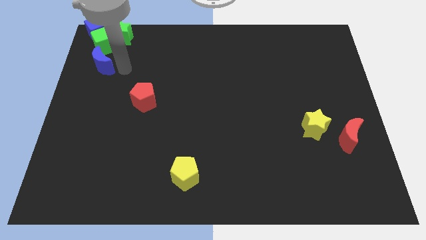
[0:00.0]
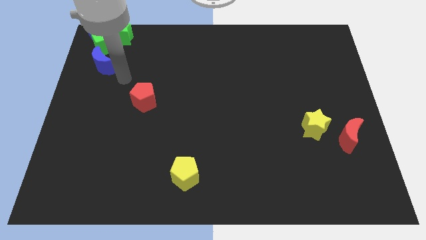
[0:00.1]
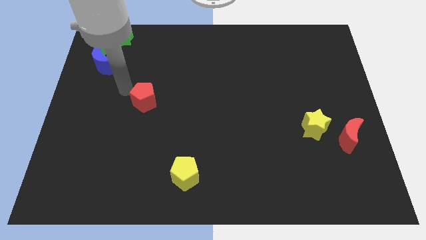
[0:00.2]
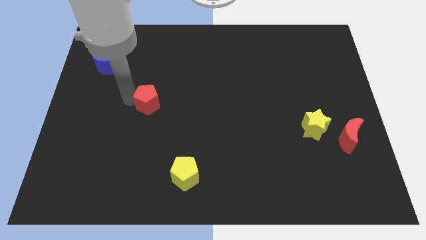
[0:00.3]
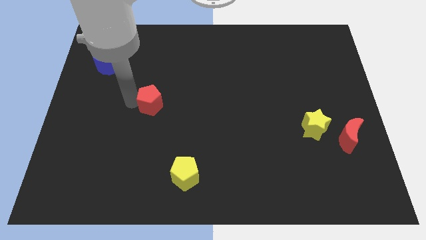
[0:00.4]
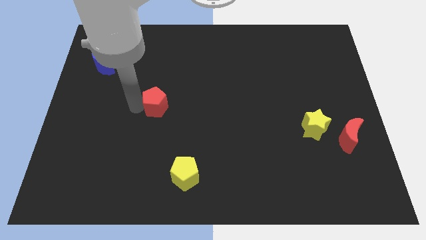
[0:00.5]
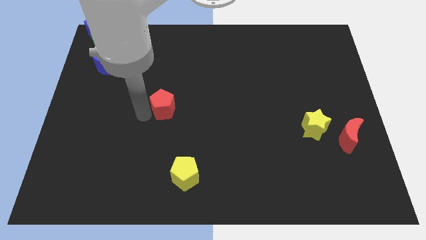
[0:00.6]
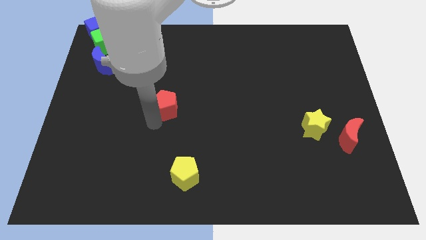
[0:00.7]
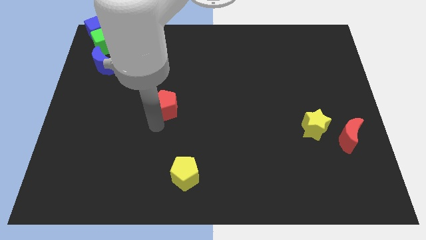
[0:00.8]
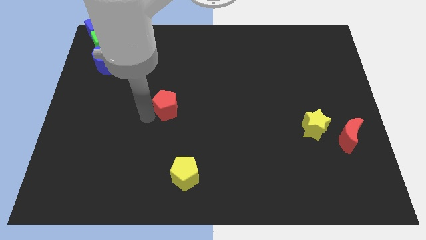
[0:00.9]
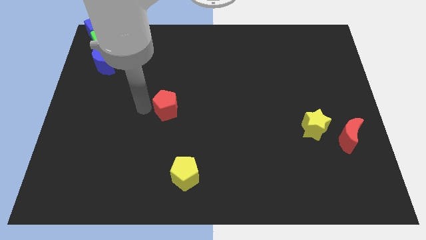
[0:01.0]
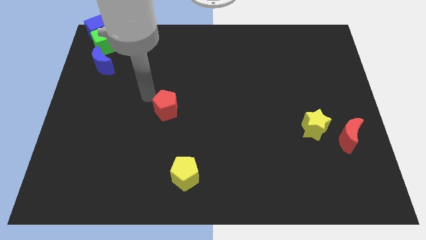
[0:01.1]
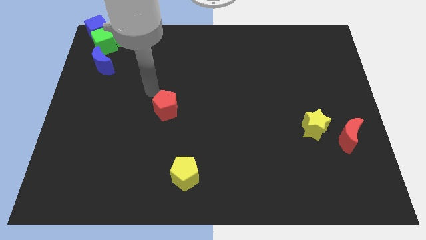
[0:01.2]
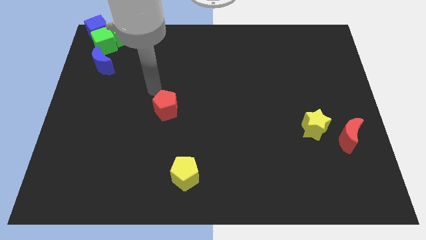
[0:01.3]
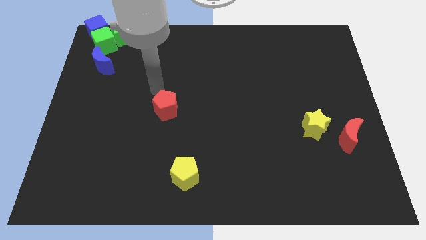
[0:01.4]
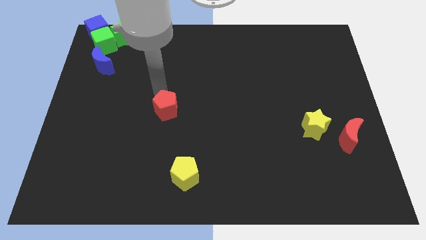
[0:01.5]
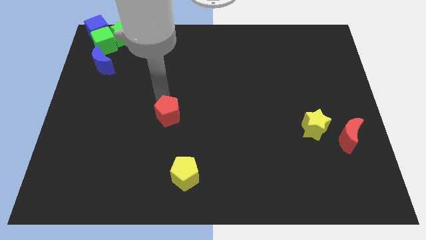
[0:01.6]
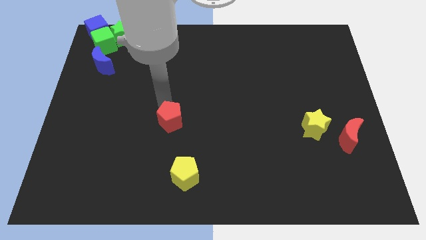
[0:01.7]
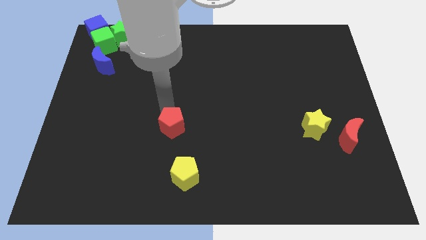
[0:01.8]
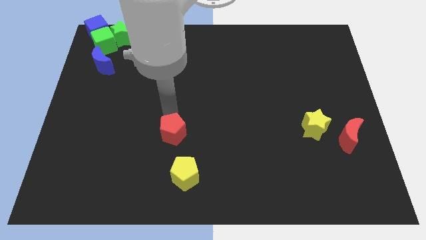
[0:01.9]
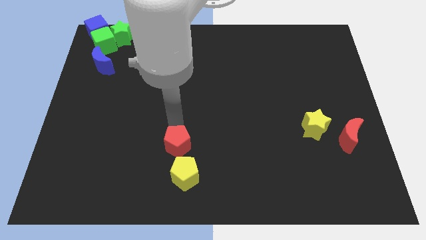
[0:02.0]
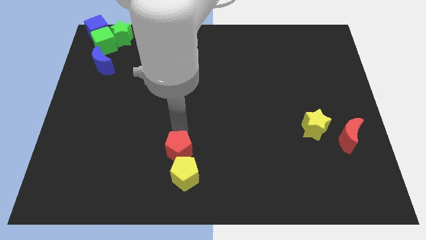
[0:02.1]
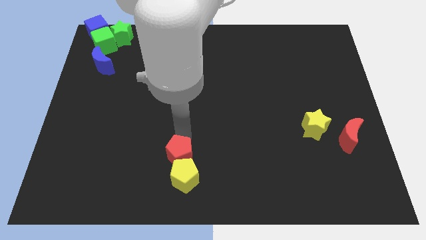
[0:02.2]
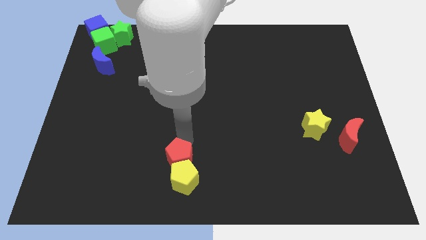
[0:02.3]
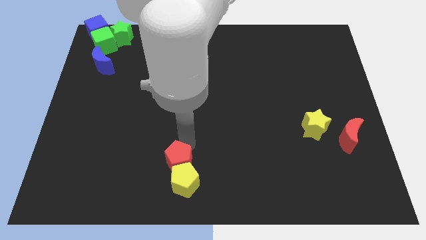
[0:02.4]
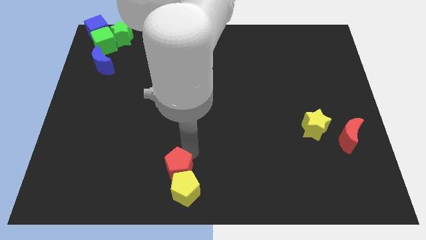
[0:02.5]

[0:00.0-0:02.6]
move the red pentagon into the yellow pentagon at the bottom

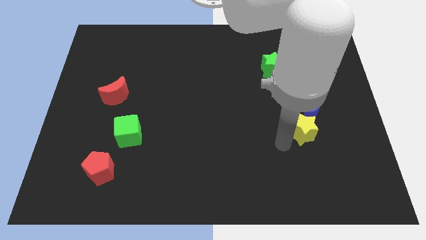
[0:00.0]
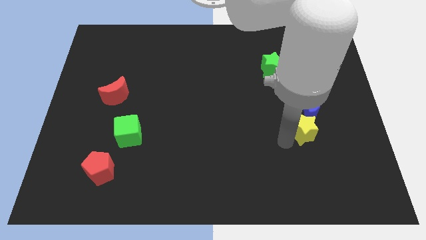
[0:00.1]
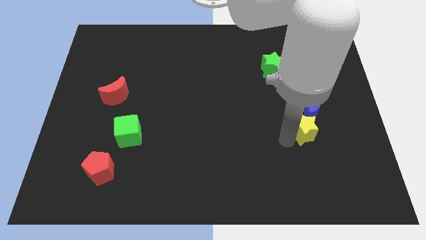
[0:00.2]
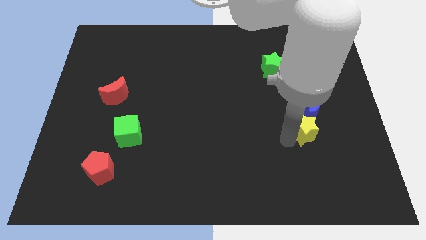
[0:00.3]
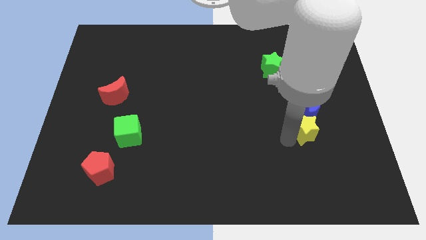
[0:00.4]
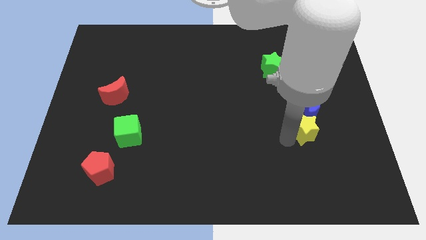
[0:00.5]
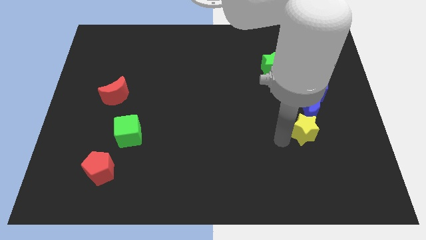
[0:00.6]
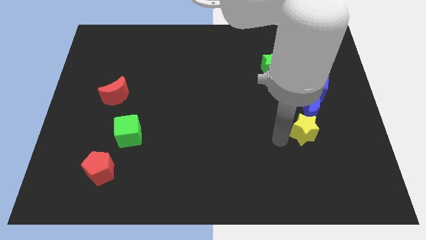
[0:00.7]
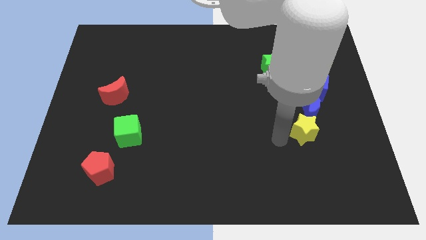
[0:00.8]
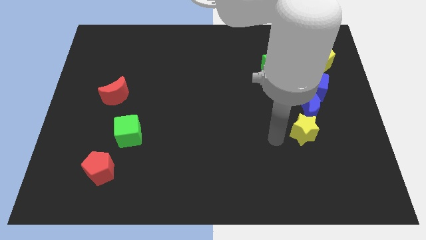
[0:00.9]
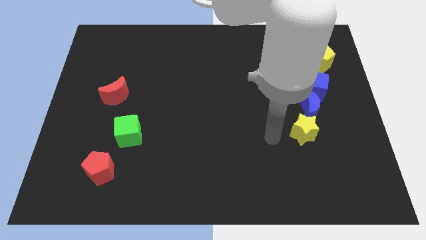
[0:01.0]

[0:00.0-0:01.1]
place yellow star at the bottom of blue crescent

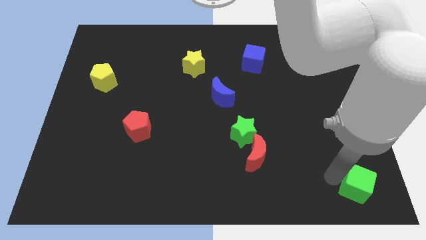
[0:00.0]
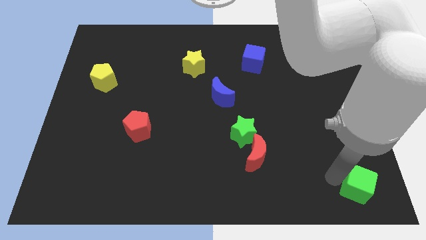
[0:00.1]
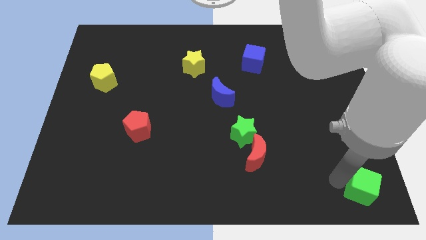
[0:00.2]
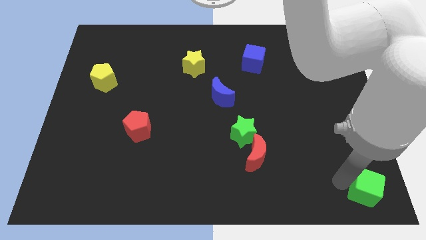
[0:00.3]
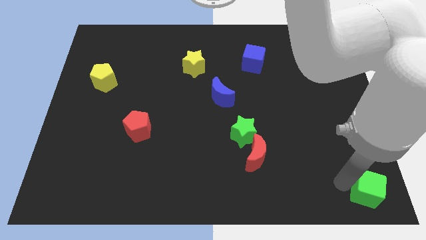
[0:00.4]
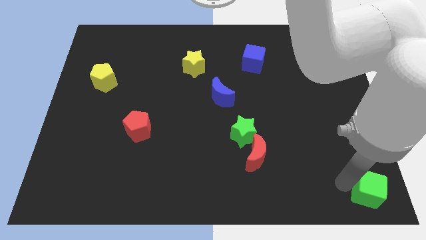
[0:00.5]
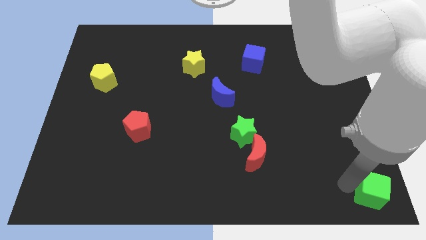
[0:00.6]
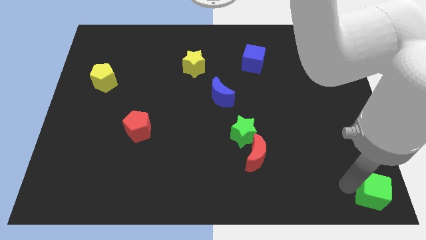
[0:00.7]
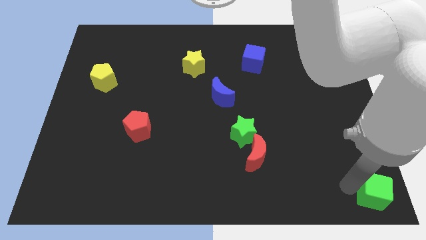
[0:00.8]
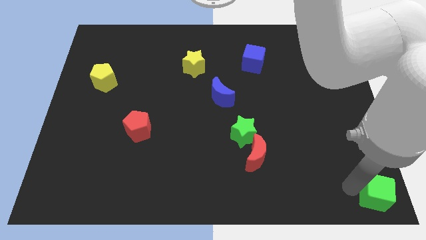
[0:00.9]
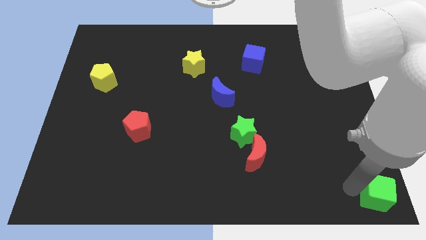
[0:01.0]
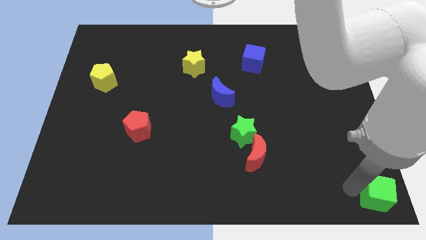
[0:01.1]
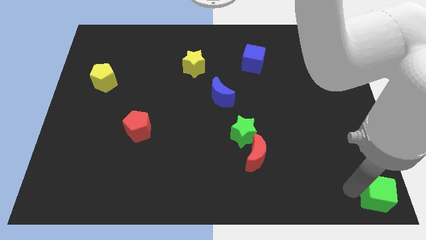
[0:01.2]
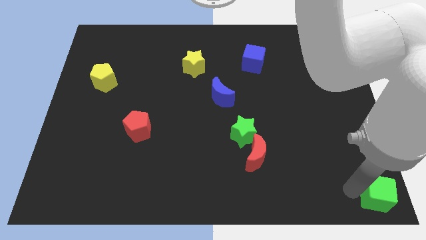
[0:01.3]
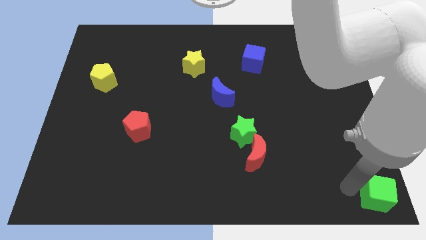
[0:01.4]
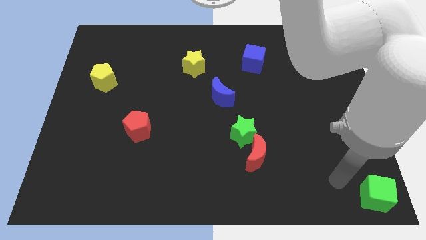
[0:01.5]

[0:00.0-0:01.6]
push the green cube to the right bottom corner of the board

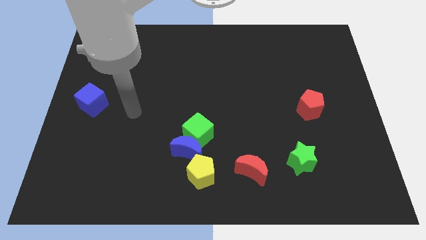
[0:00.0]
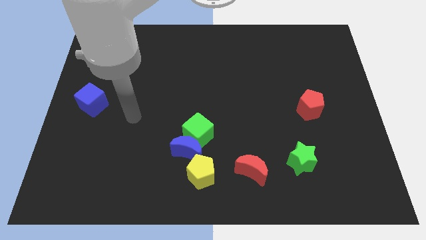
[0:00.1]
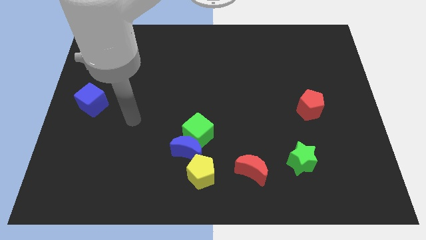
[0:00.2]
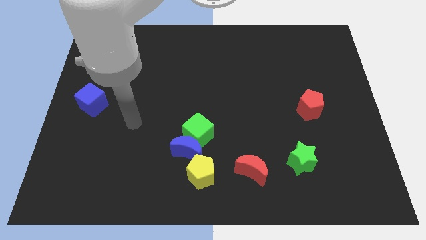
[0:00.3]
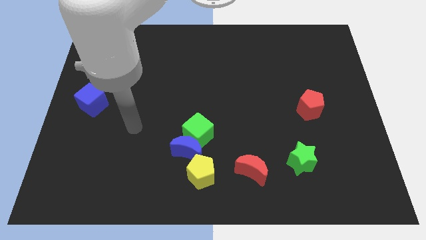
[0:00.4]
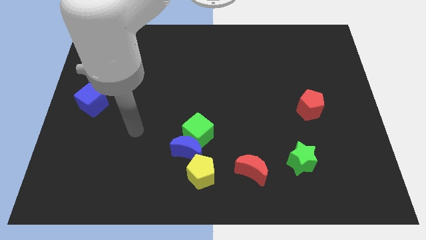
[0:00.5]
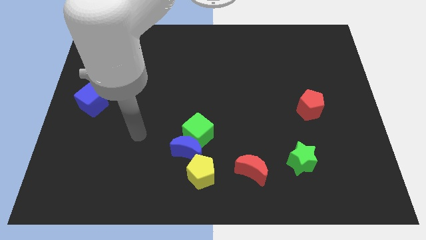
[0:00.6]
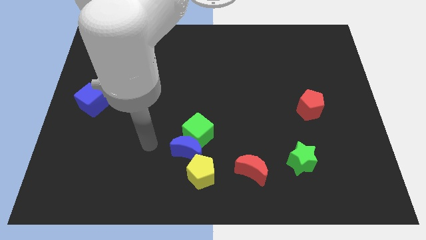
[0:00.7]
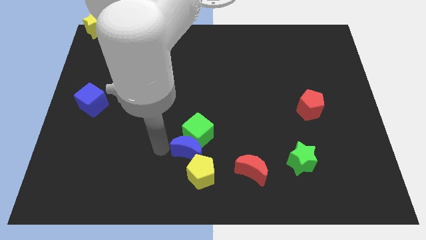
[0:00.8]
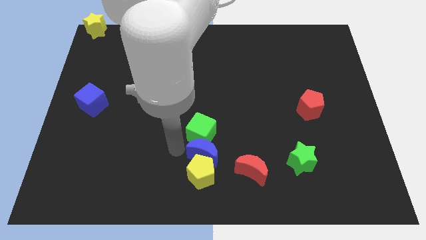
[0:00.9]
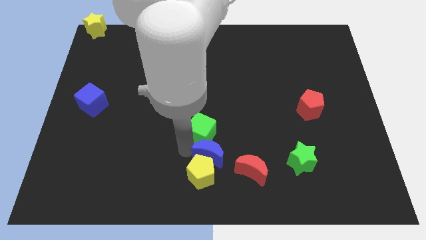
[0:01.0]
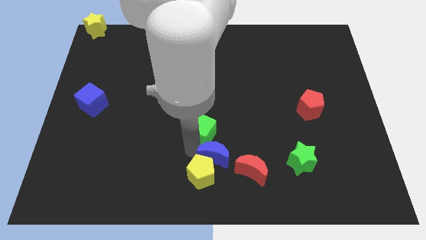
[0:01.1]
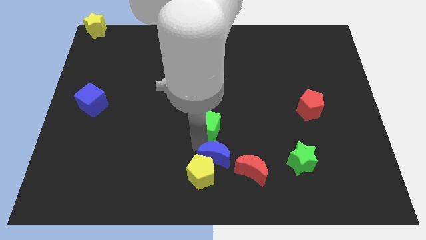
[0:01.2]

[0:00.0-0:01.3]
push blue moon slightly to the right

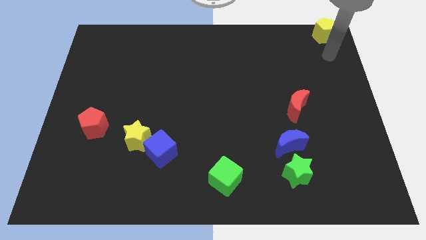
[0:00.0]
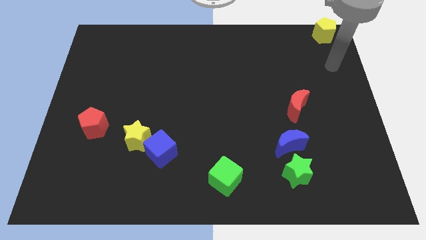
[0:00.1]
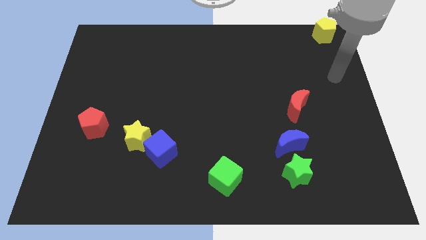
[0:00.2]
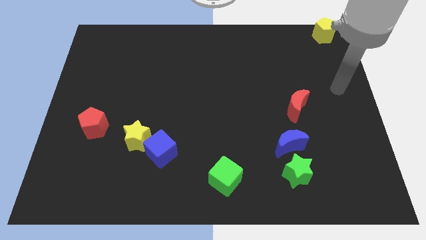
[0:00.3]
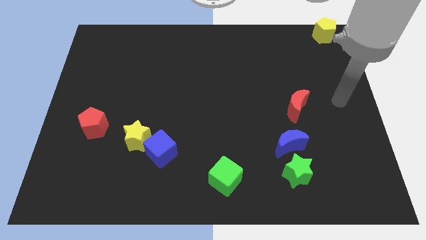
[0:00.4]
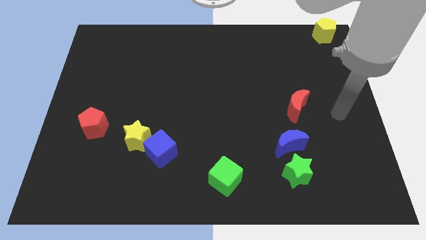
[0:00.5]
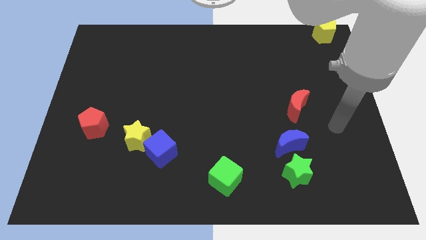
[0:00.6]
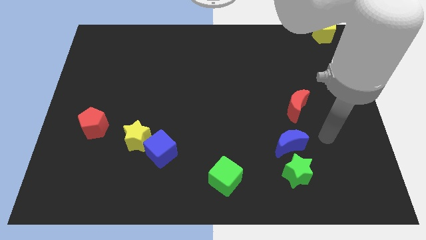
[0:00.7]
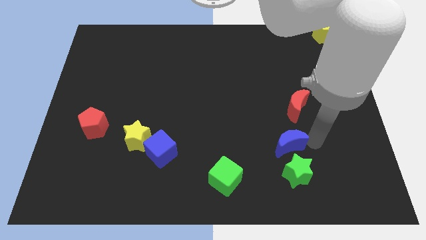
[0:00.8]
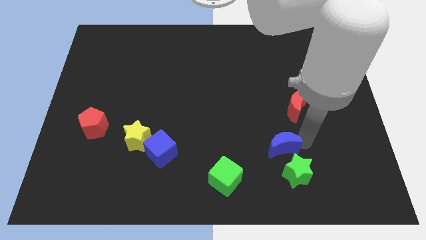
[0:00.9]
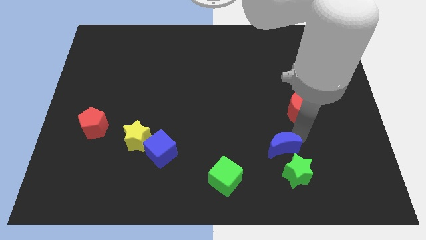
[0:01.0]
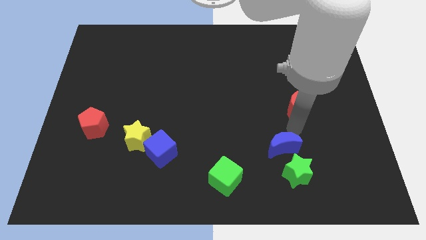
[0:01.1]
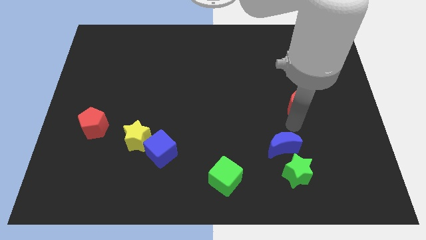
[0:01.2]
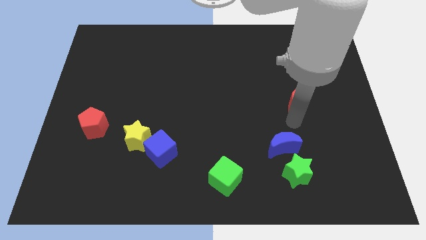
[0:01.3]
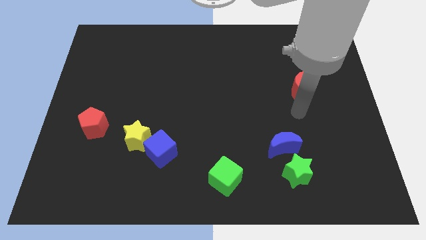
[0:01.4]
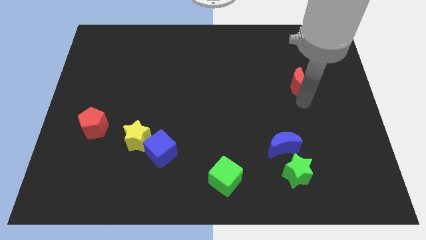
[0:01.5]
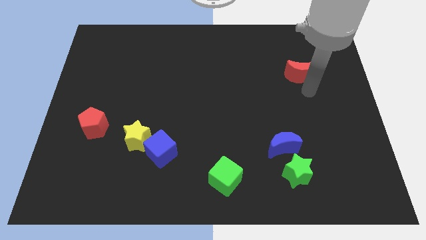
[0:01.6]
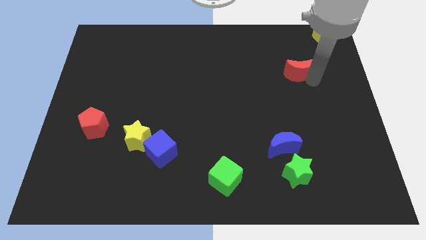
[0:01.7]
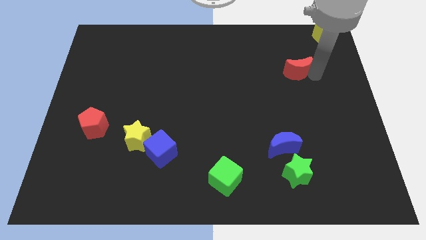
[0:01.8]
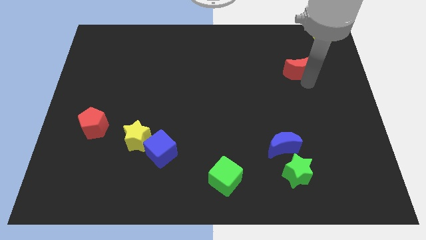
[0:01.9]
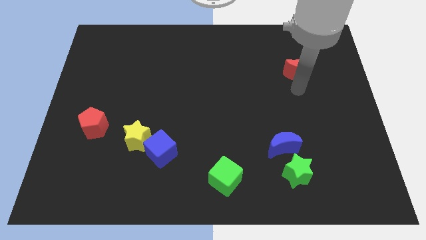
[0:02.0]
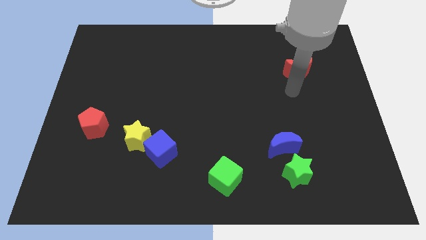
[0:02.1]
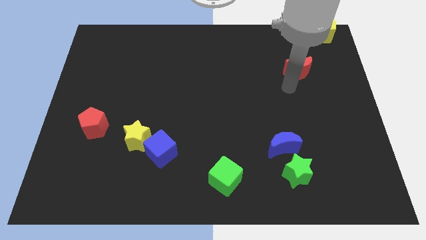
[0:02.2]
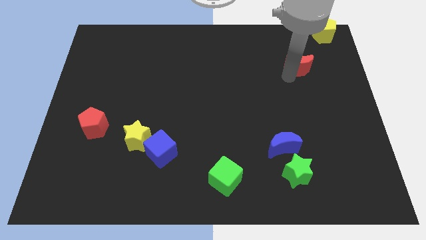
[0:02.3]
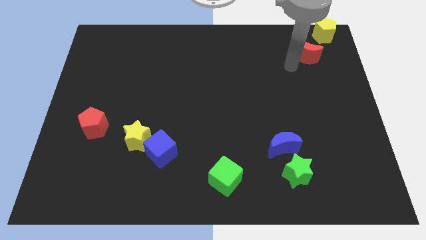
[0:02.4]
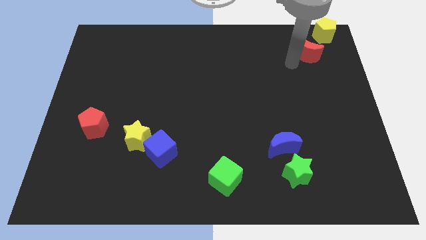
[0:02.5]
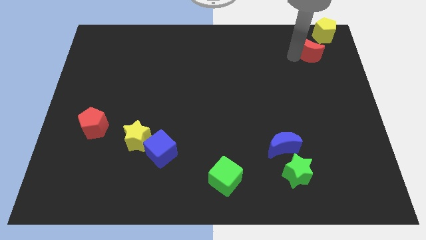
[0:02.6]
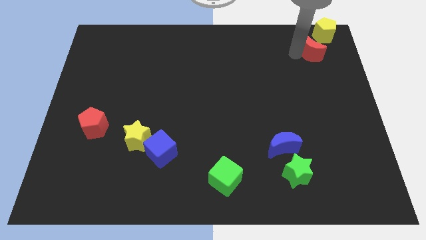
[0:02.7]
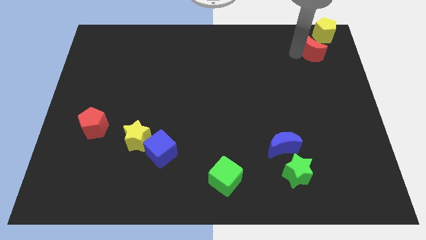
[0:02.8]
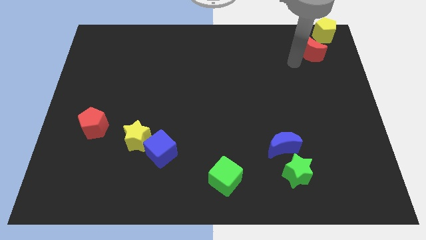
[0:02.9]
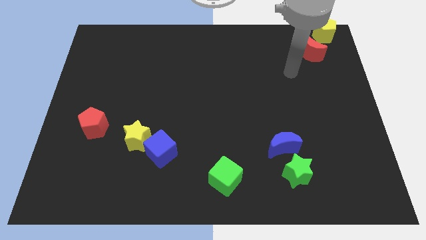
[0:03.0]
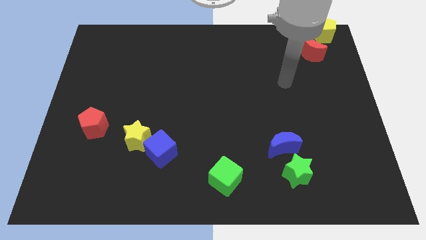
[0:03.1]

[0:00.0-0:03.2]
slide the red crescent towards the bottom side of the yellow pentagon
